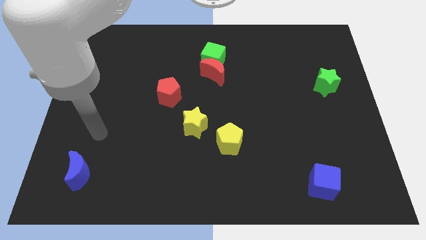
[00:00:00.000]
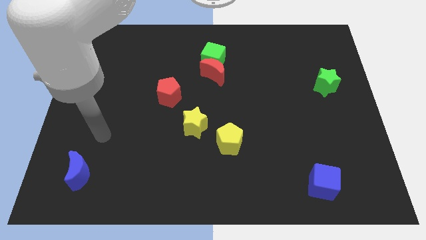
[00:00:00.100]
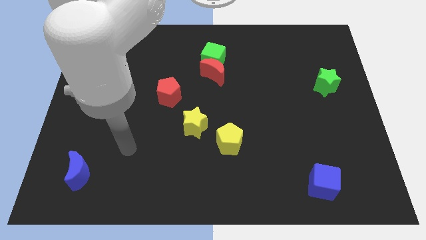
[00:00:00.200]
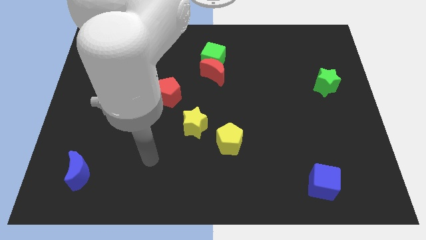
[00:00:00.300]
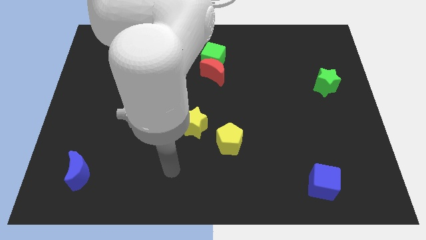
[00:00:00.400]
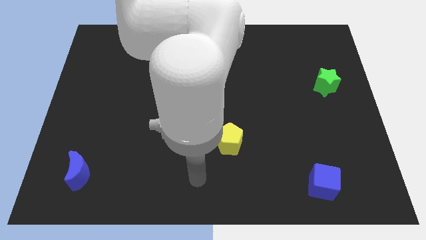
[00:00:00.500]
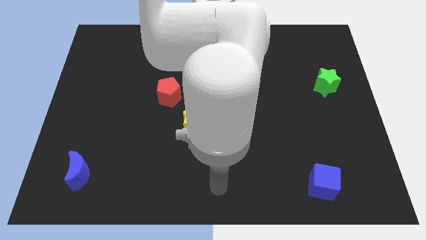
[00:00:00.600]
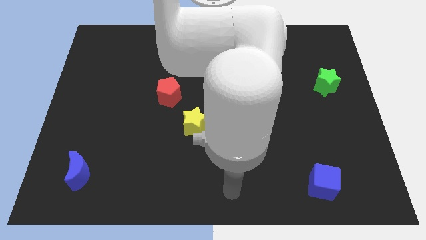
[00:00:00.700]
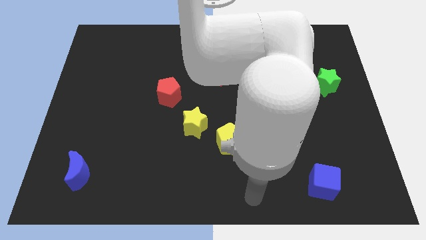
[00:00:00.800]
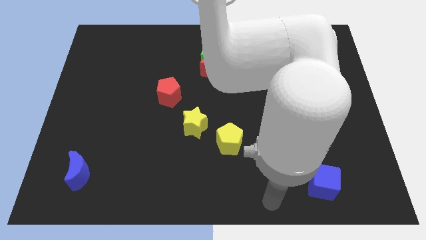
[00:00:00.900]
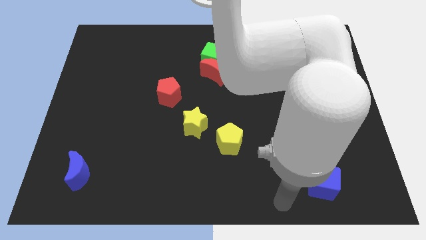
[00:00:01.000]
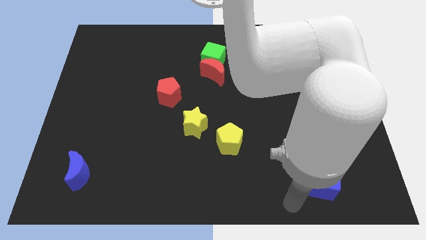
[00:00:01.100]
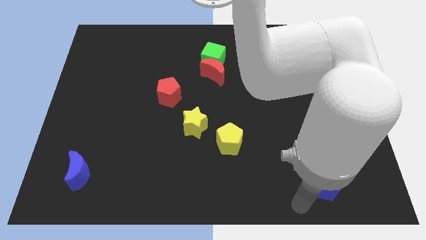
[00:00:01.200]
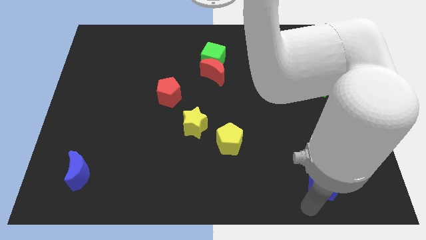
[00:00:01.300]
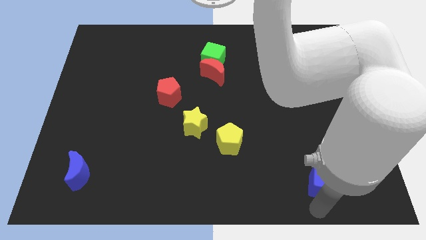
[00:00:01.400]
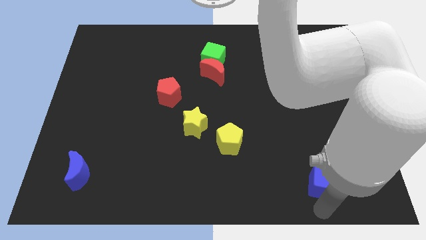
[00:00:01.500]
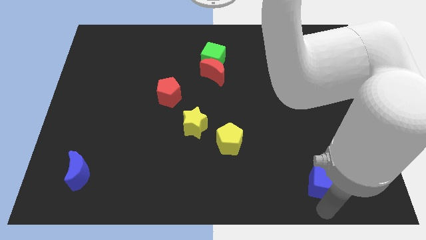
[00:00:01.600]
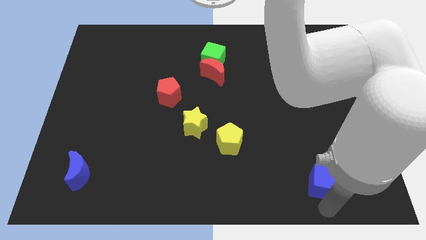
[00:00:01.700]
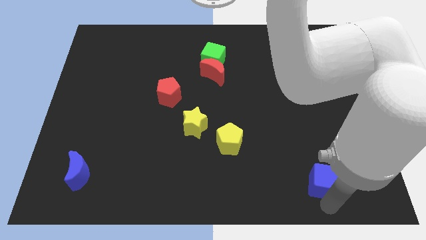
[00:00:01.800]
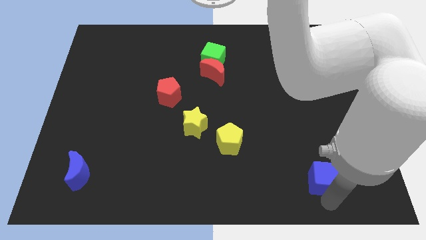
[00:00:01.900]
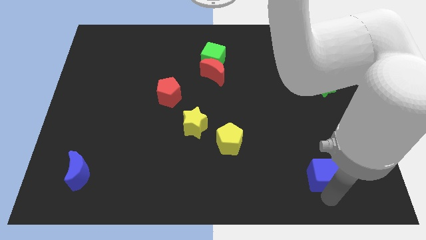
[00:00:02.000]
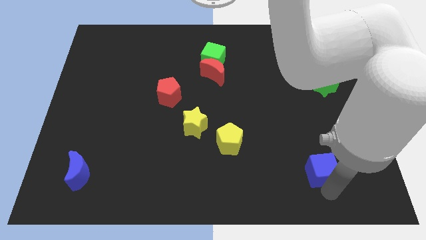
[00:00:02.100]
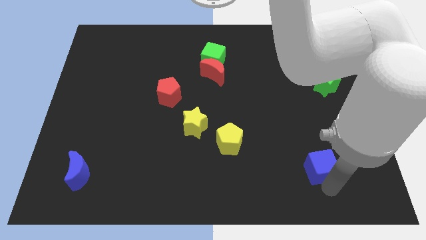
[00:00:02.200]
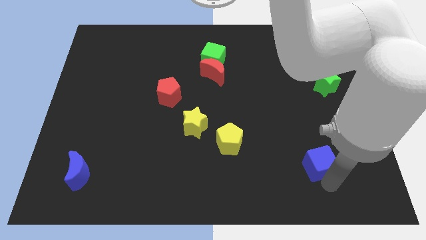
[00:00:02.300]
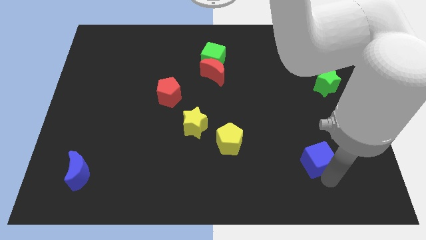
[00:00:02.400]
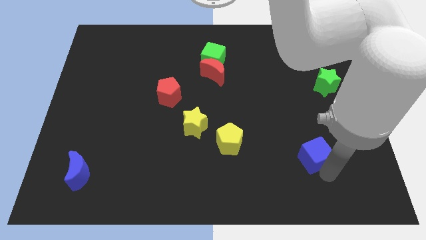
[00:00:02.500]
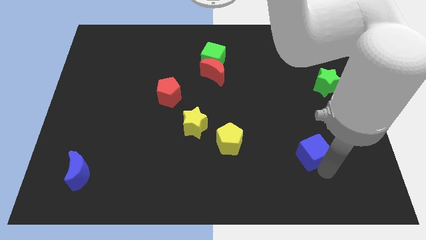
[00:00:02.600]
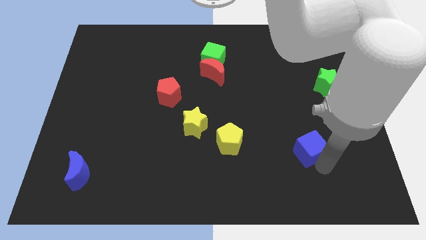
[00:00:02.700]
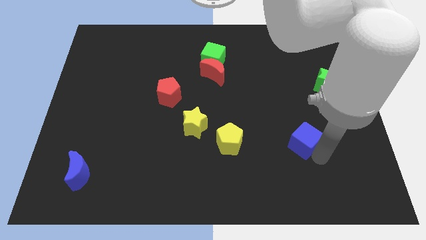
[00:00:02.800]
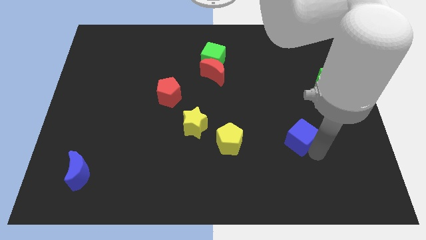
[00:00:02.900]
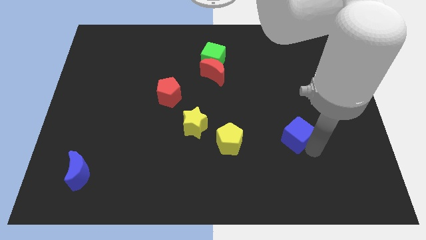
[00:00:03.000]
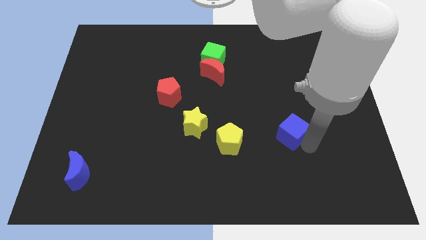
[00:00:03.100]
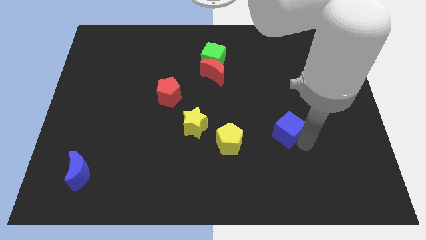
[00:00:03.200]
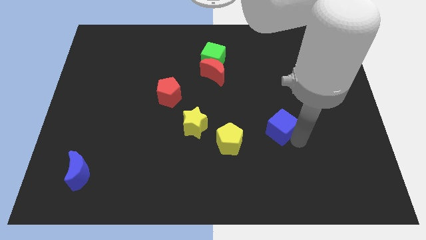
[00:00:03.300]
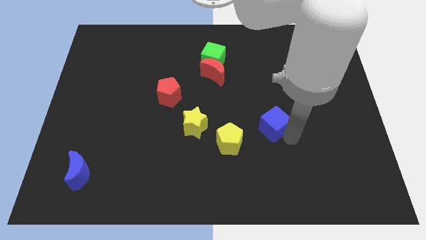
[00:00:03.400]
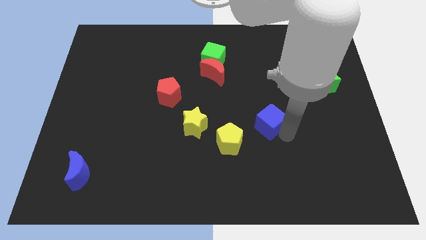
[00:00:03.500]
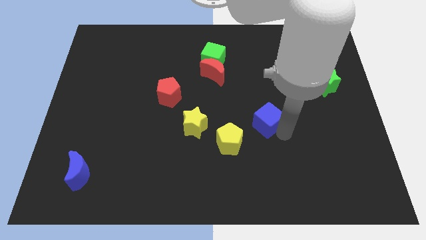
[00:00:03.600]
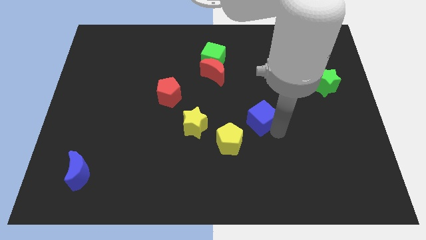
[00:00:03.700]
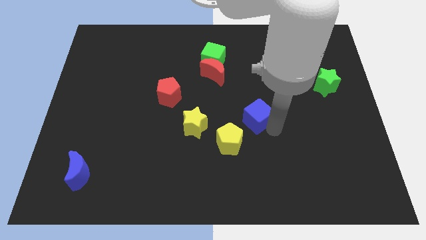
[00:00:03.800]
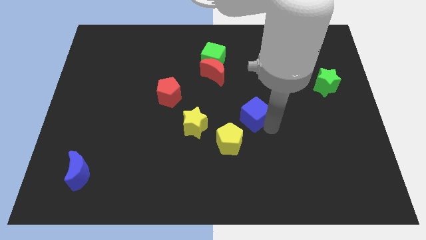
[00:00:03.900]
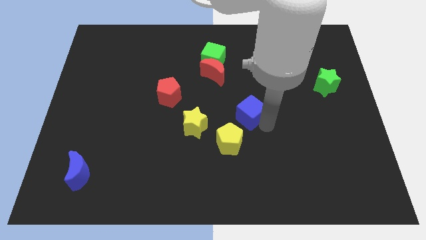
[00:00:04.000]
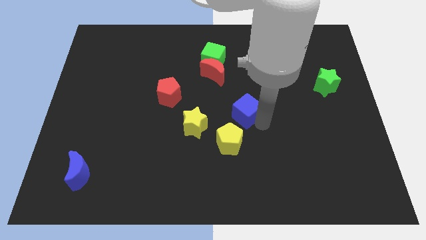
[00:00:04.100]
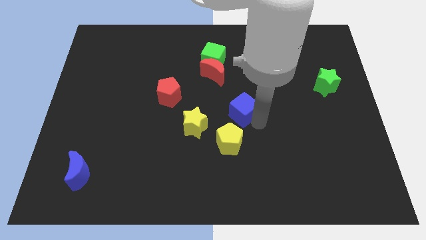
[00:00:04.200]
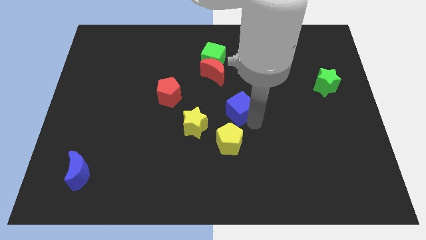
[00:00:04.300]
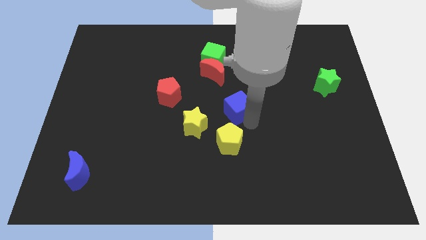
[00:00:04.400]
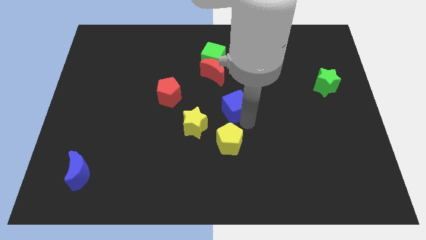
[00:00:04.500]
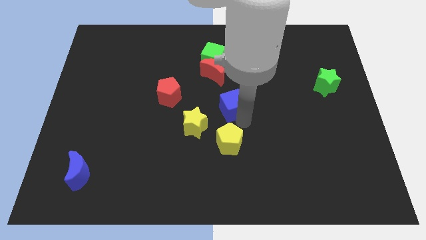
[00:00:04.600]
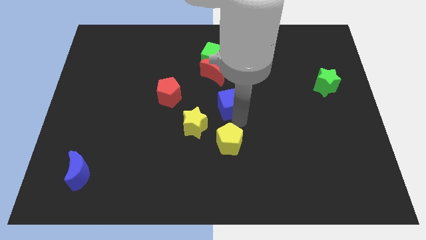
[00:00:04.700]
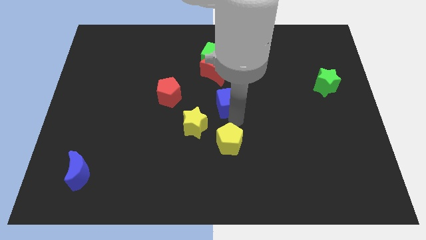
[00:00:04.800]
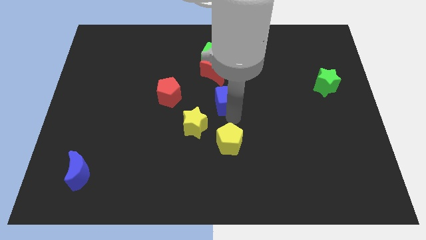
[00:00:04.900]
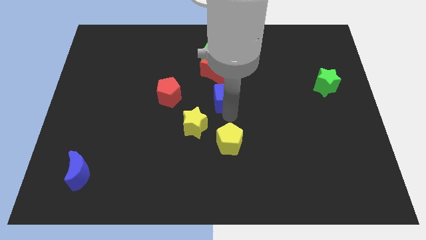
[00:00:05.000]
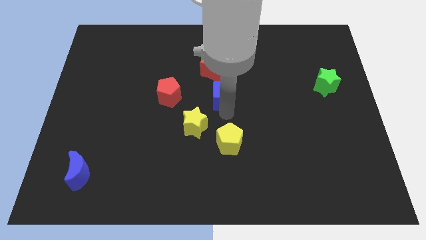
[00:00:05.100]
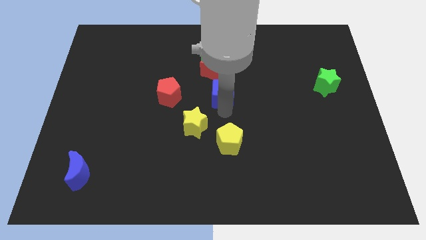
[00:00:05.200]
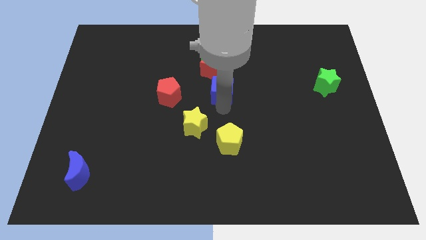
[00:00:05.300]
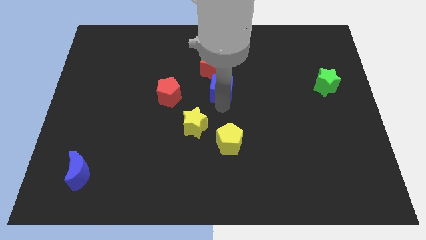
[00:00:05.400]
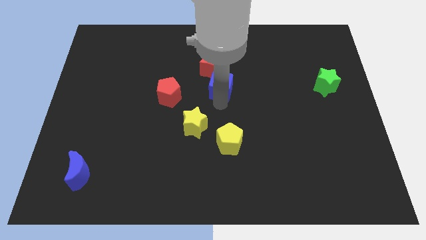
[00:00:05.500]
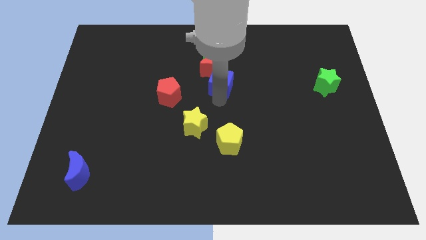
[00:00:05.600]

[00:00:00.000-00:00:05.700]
put the blue cube towards the red moon

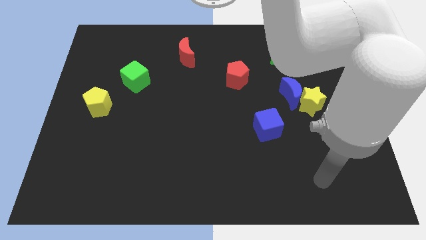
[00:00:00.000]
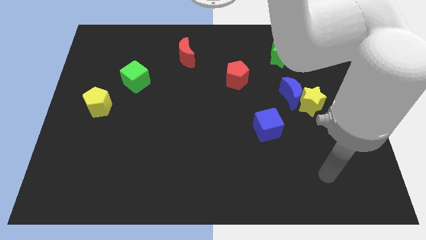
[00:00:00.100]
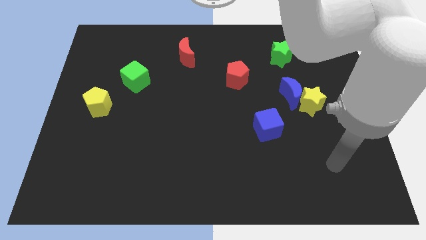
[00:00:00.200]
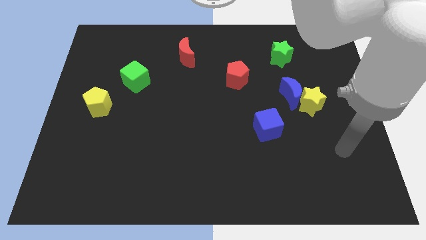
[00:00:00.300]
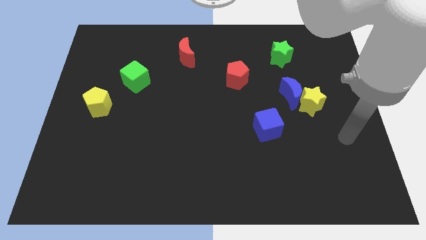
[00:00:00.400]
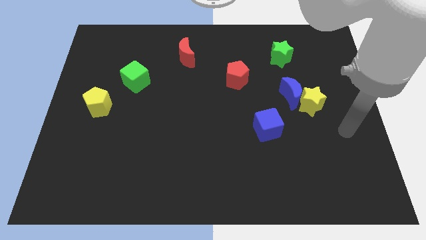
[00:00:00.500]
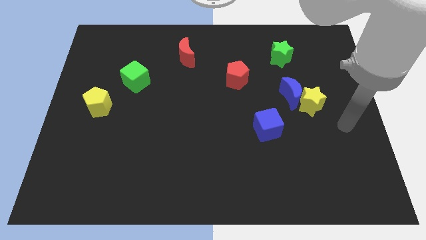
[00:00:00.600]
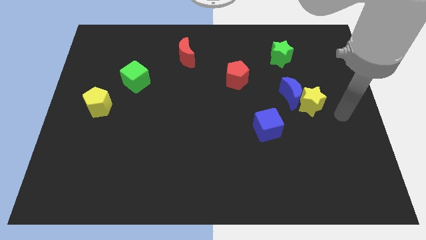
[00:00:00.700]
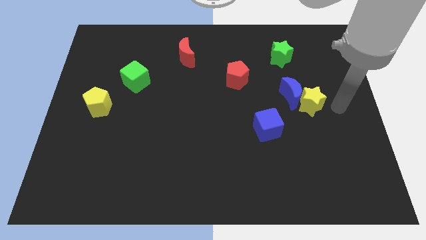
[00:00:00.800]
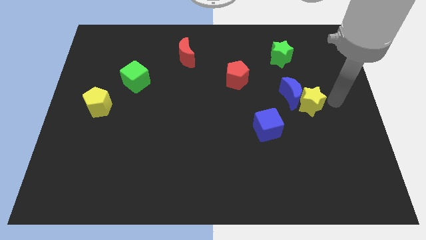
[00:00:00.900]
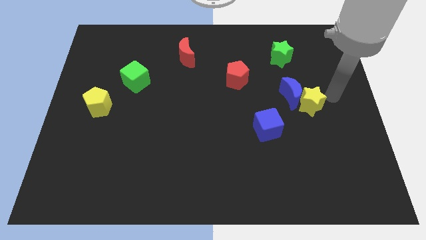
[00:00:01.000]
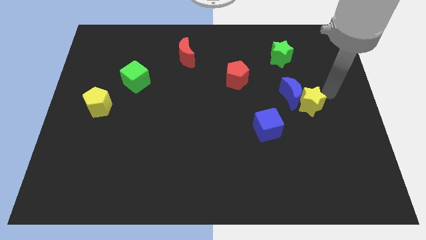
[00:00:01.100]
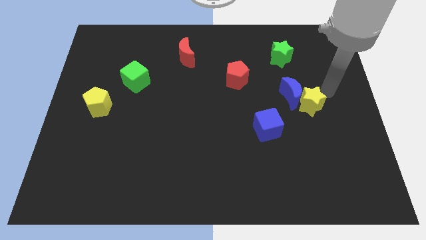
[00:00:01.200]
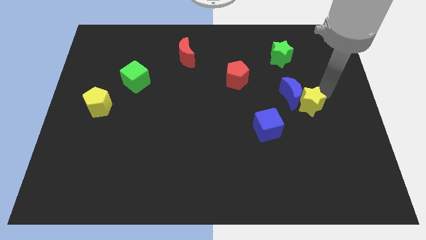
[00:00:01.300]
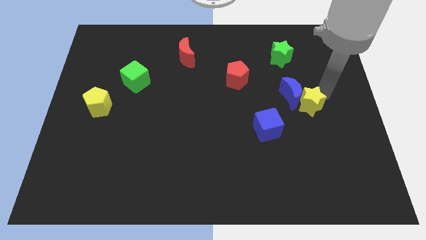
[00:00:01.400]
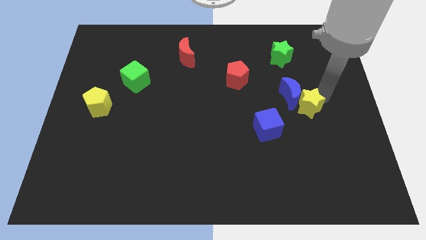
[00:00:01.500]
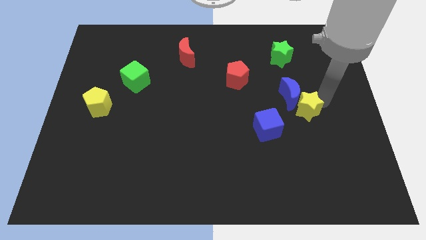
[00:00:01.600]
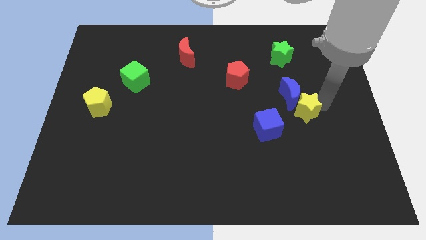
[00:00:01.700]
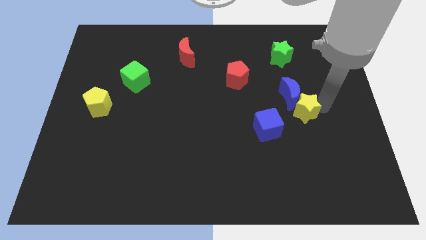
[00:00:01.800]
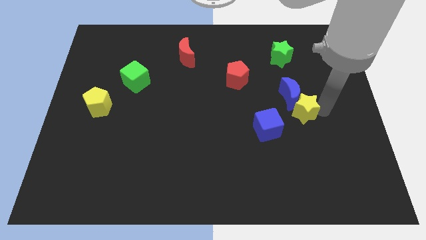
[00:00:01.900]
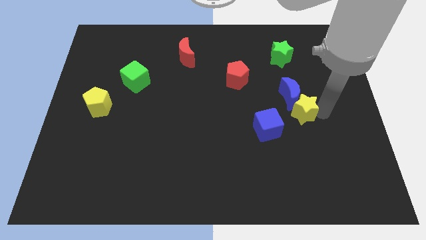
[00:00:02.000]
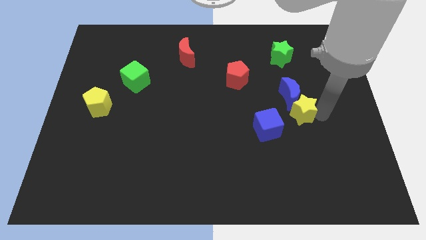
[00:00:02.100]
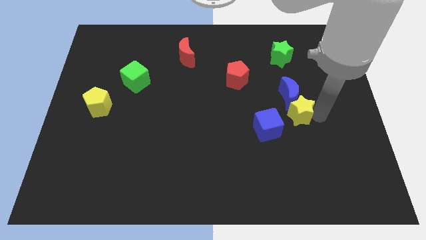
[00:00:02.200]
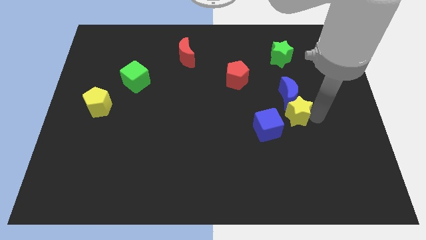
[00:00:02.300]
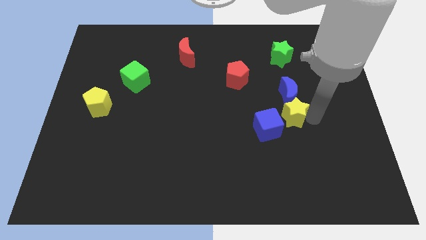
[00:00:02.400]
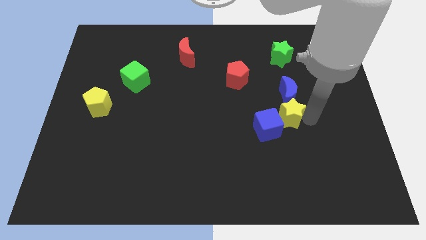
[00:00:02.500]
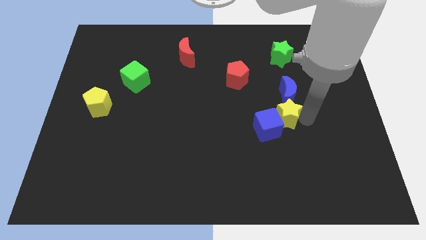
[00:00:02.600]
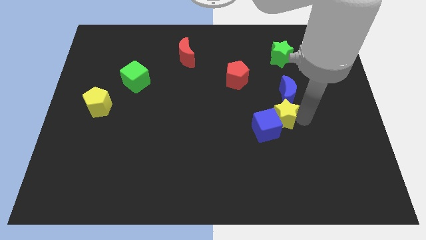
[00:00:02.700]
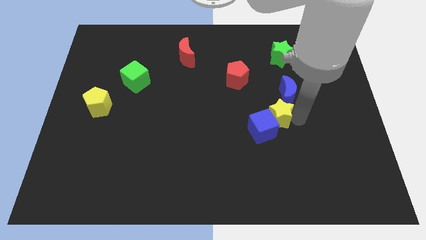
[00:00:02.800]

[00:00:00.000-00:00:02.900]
push the yellow star next to the blue cube
